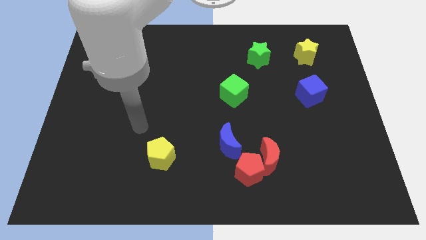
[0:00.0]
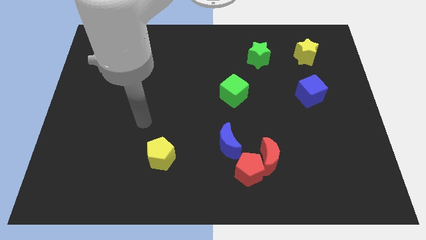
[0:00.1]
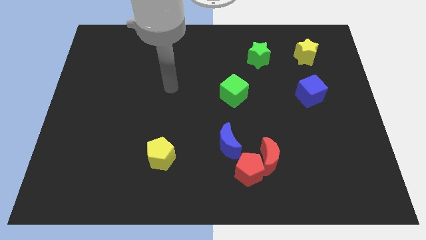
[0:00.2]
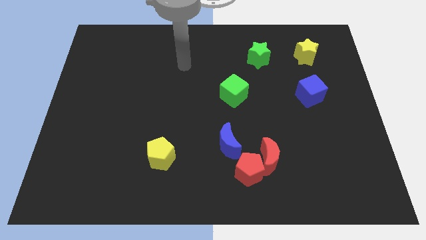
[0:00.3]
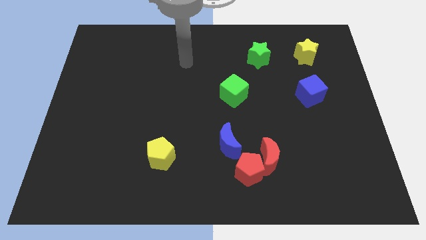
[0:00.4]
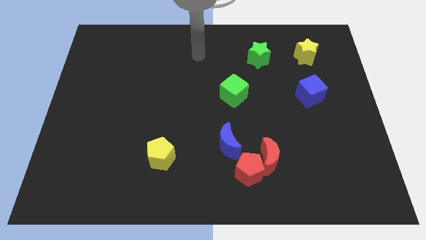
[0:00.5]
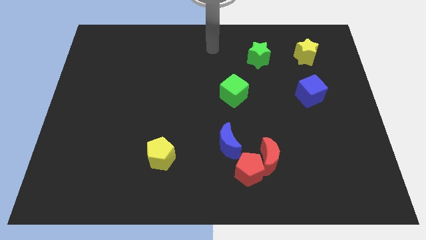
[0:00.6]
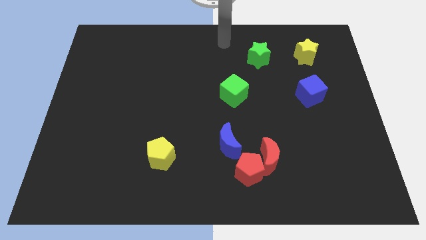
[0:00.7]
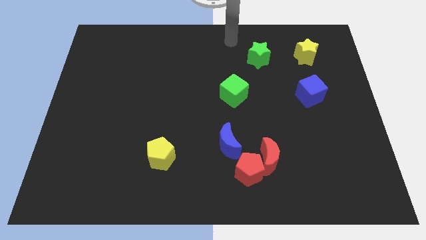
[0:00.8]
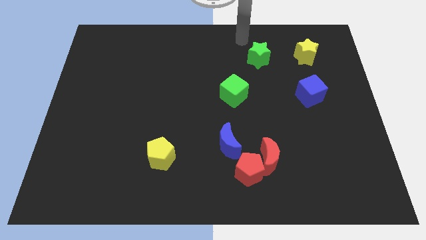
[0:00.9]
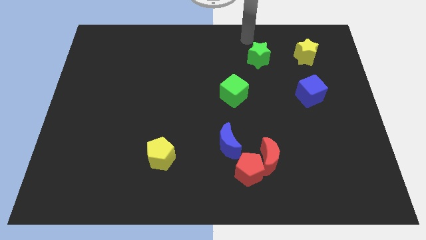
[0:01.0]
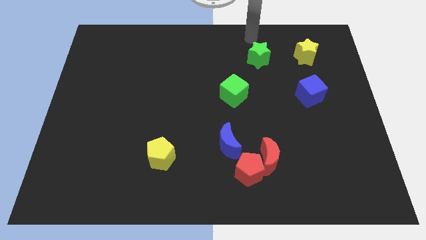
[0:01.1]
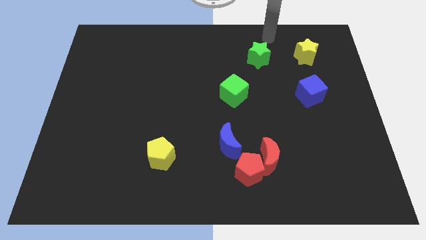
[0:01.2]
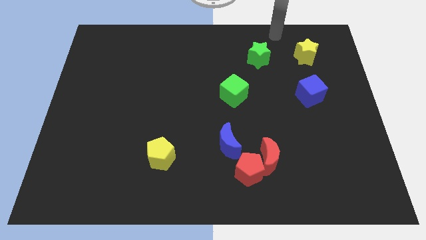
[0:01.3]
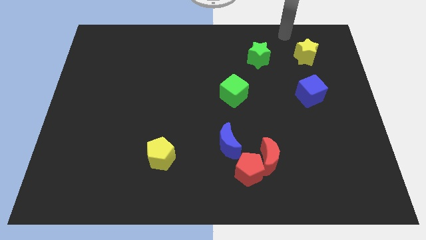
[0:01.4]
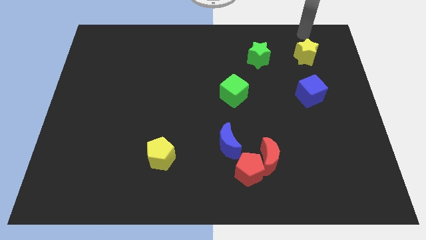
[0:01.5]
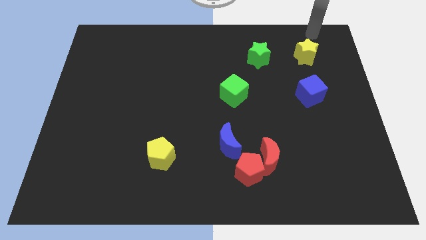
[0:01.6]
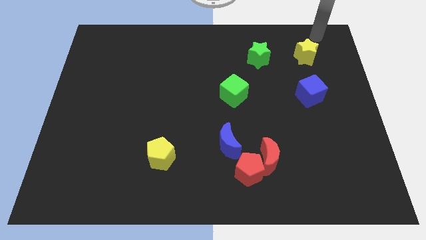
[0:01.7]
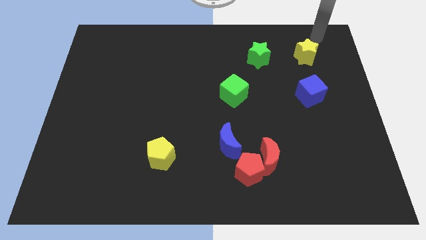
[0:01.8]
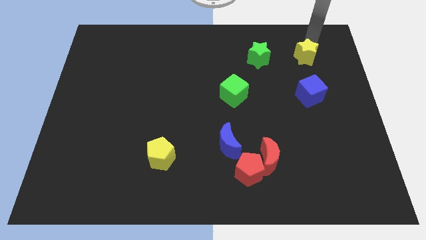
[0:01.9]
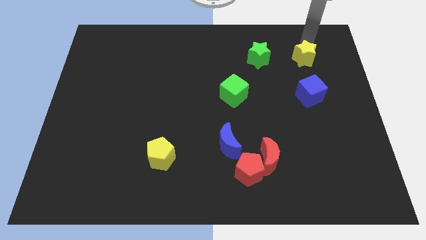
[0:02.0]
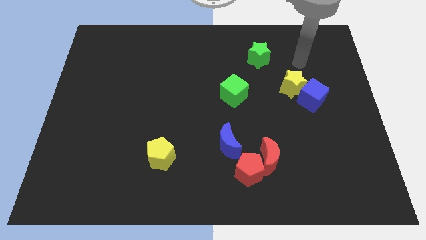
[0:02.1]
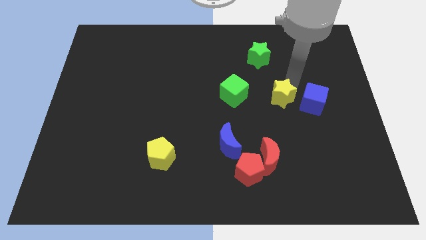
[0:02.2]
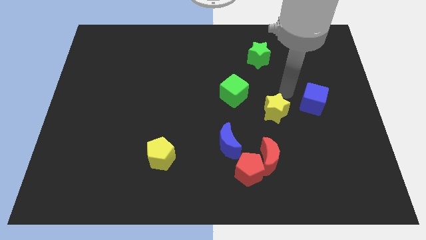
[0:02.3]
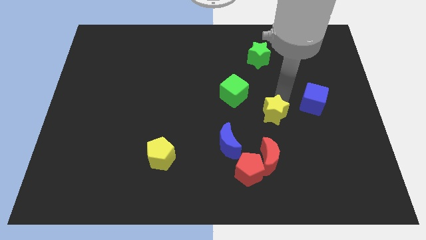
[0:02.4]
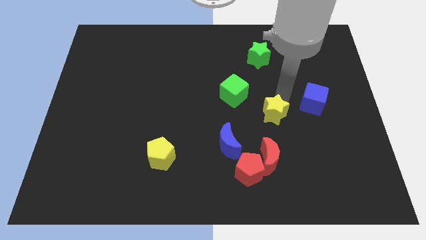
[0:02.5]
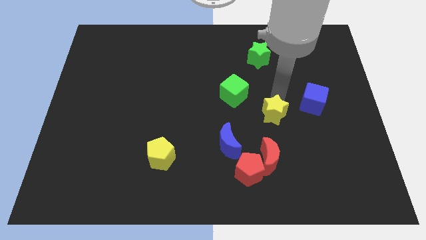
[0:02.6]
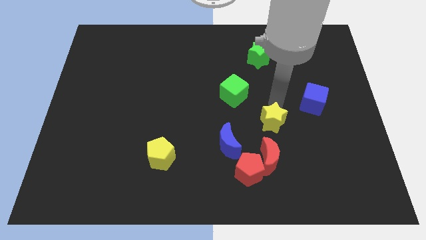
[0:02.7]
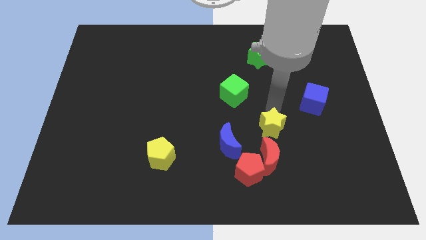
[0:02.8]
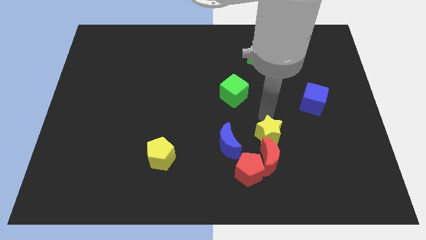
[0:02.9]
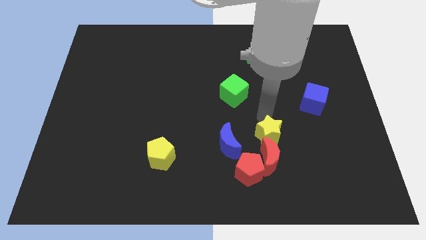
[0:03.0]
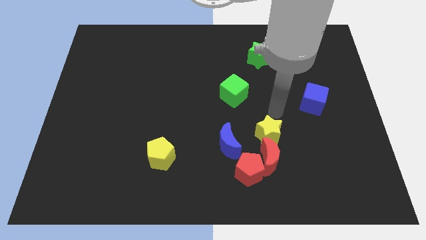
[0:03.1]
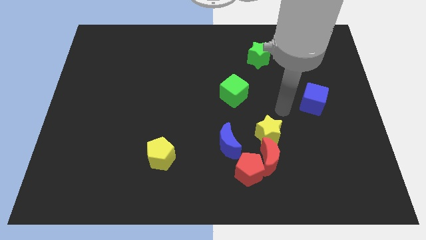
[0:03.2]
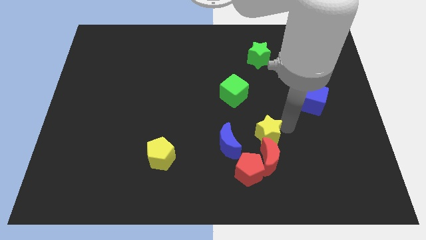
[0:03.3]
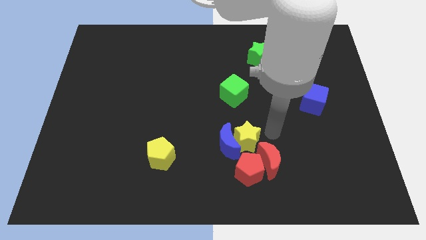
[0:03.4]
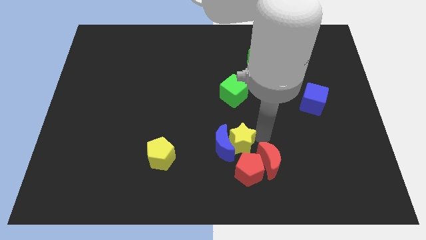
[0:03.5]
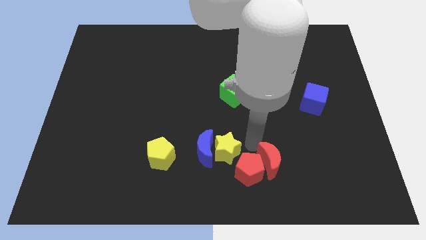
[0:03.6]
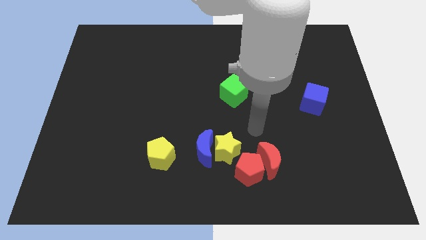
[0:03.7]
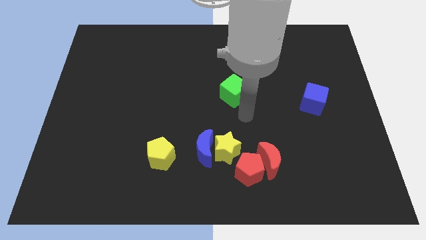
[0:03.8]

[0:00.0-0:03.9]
put the yellow star to the red pentagon

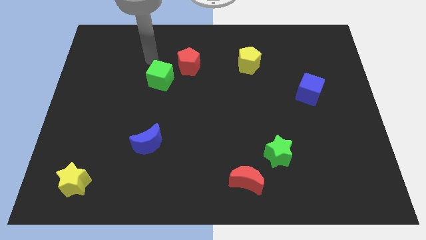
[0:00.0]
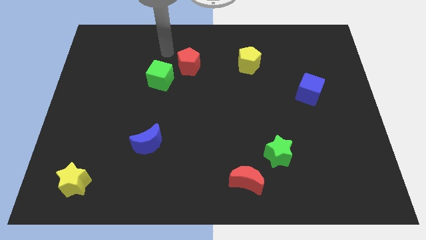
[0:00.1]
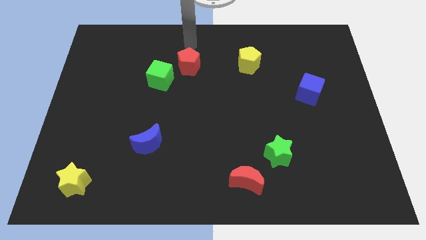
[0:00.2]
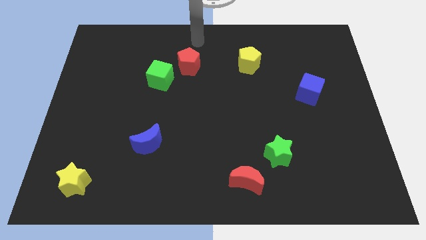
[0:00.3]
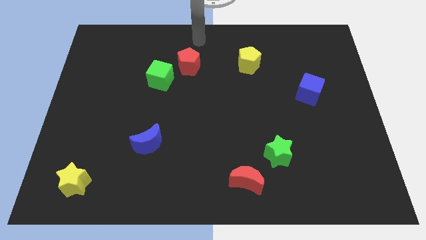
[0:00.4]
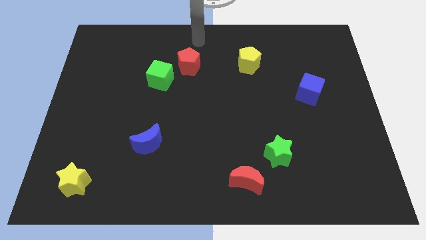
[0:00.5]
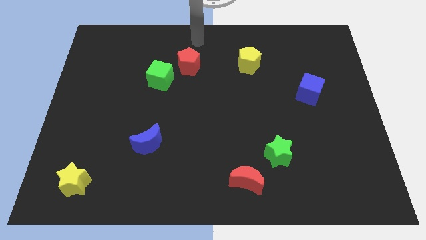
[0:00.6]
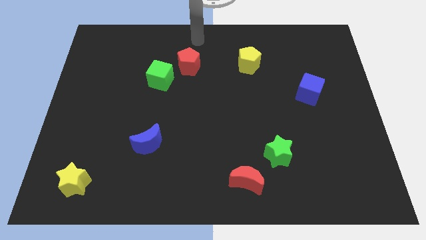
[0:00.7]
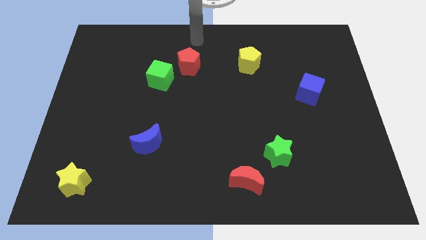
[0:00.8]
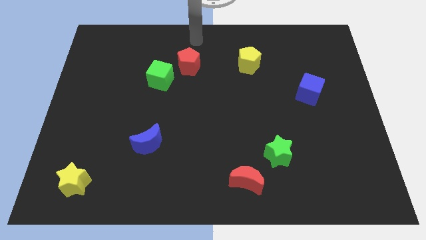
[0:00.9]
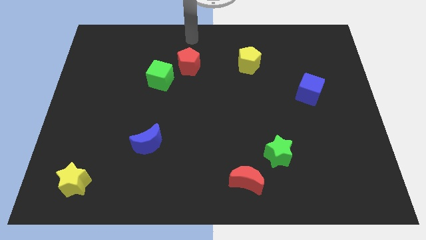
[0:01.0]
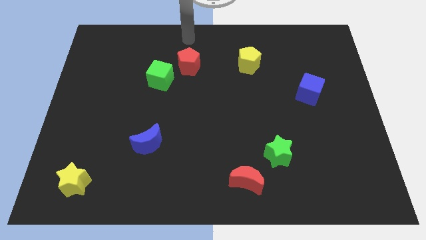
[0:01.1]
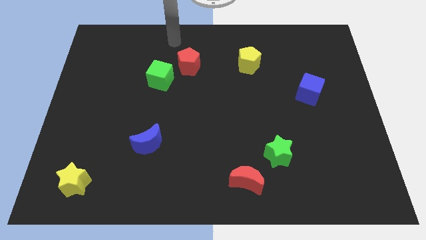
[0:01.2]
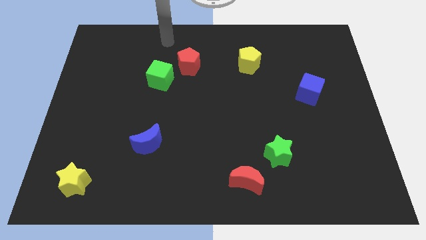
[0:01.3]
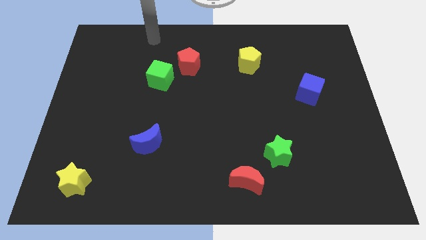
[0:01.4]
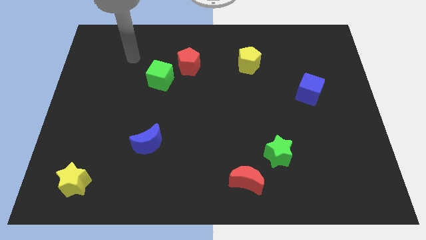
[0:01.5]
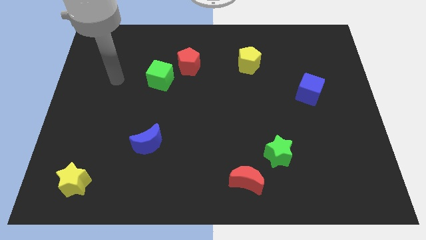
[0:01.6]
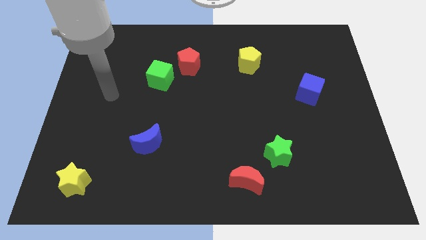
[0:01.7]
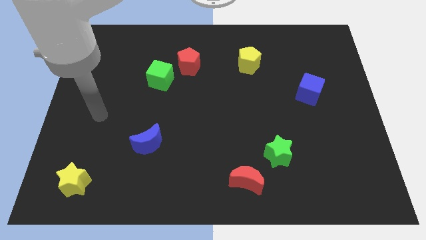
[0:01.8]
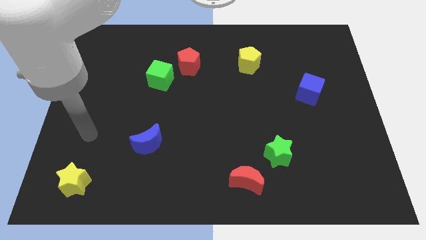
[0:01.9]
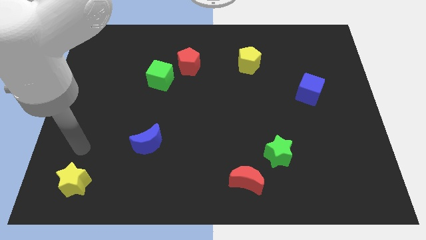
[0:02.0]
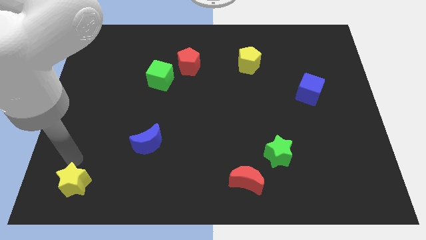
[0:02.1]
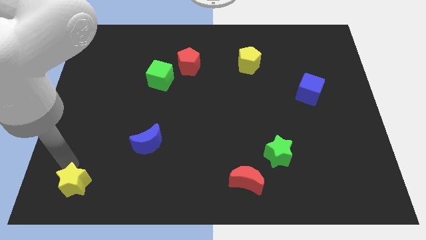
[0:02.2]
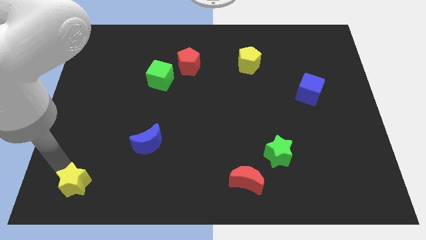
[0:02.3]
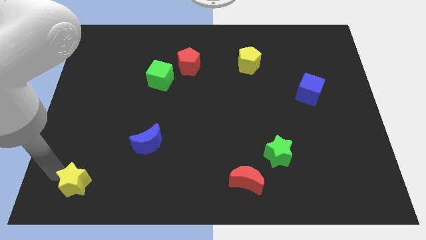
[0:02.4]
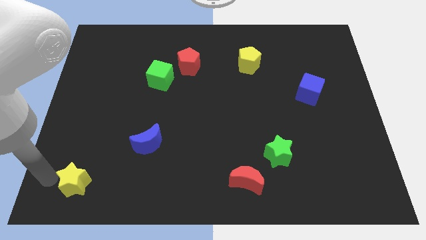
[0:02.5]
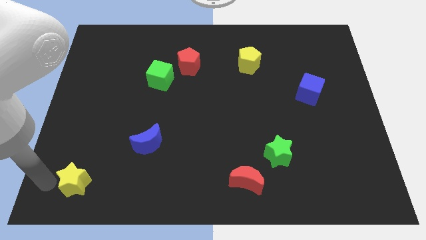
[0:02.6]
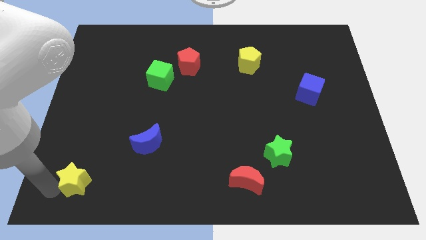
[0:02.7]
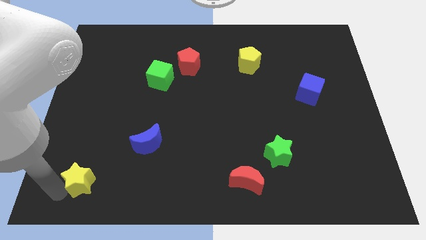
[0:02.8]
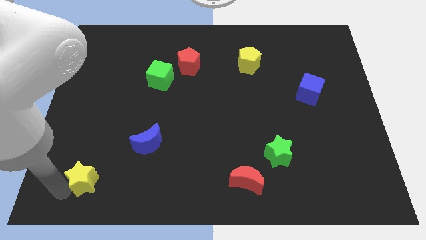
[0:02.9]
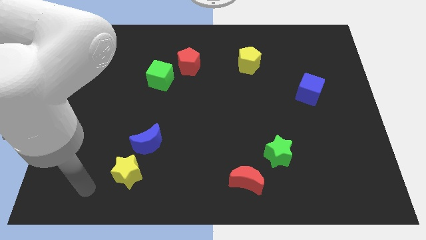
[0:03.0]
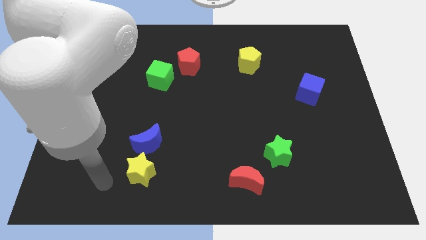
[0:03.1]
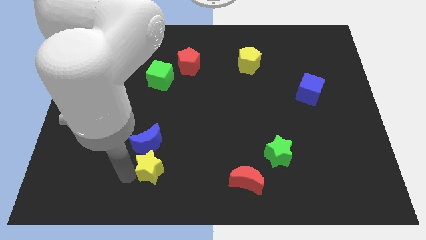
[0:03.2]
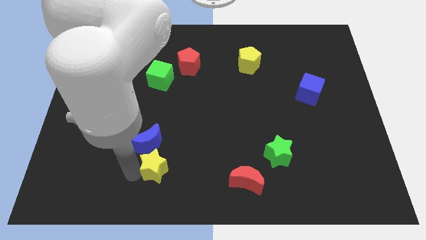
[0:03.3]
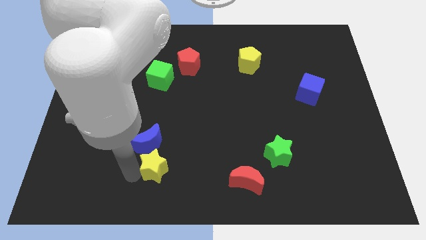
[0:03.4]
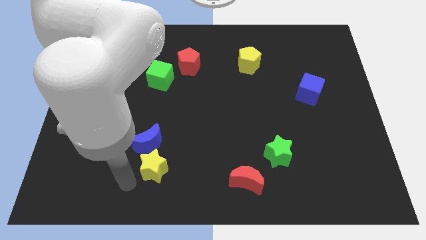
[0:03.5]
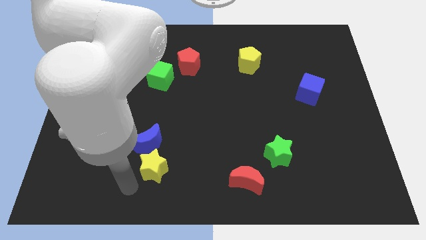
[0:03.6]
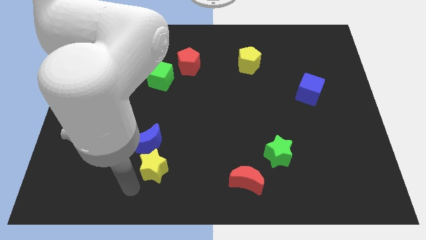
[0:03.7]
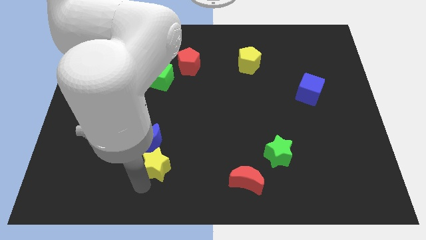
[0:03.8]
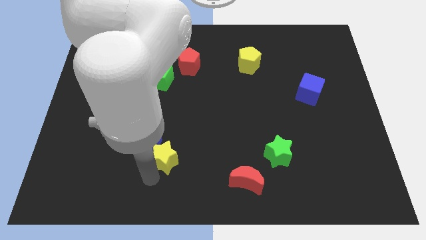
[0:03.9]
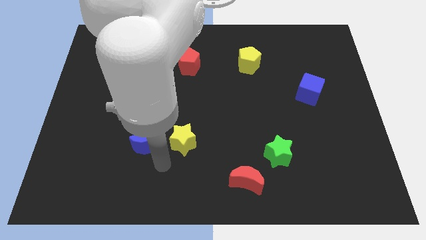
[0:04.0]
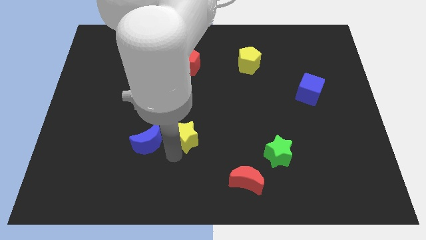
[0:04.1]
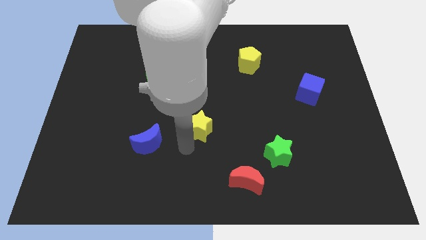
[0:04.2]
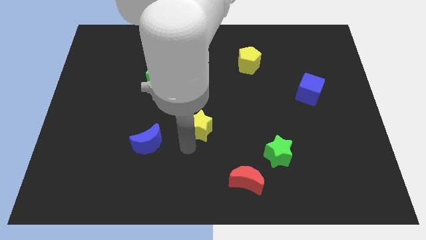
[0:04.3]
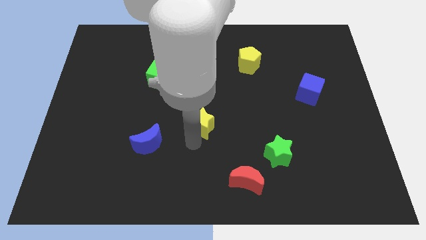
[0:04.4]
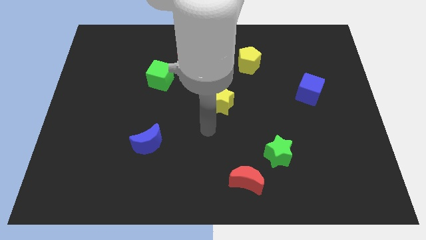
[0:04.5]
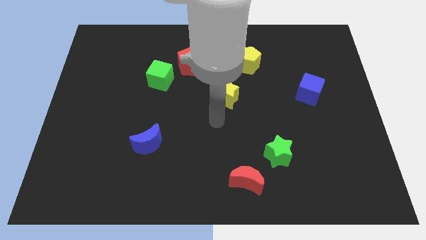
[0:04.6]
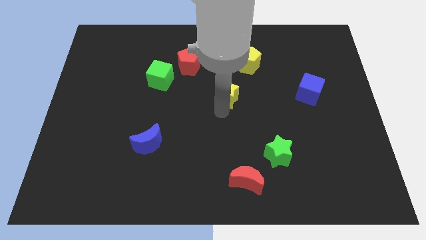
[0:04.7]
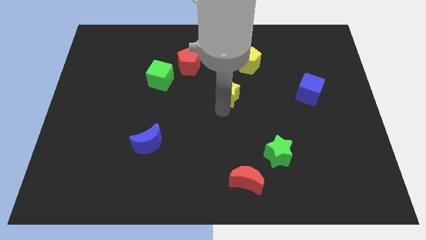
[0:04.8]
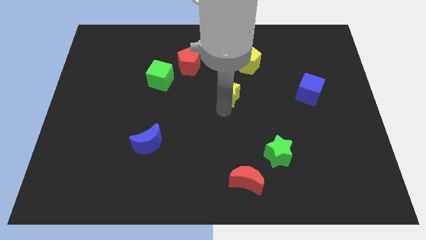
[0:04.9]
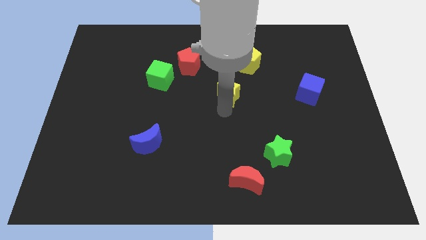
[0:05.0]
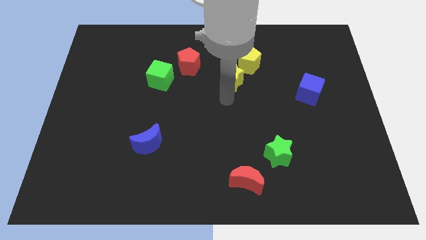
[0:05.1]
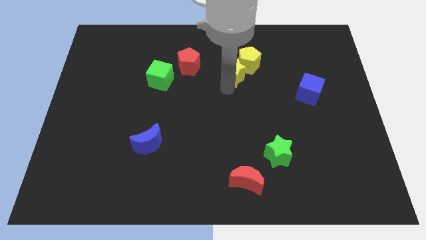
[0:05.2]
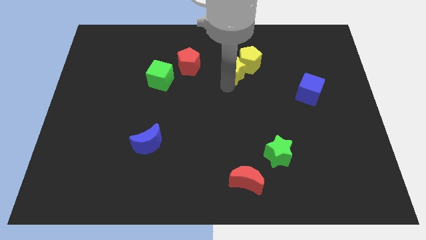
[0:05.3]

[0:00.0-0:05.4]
move the yellow star to the yellow pentagon
